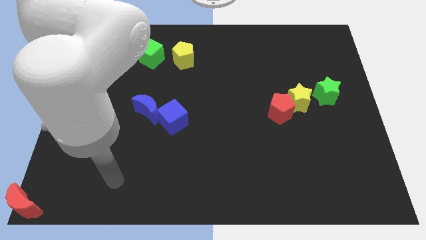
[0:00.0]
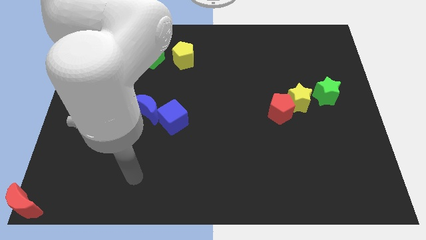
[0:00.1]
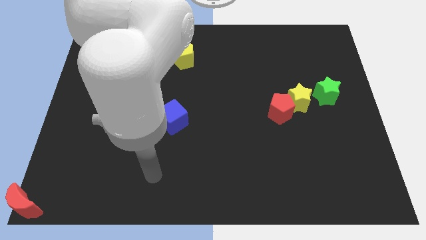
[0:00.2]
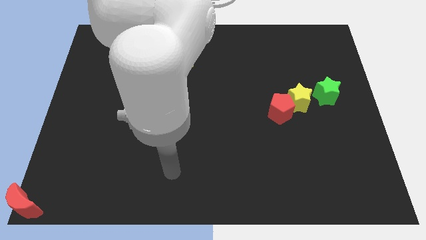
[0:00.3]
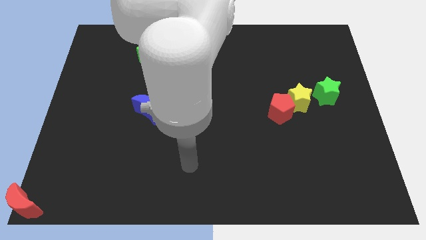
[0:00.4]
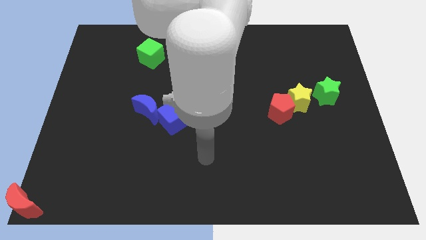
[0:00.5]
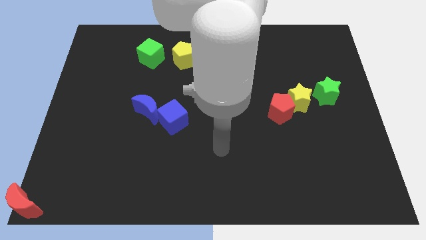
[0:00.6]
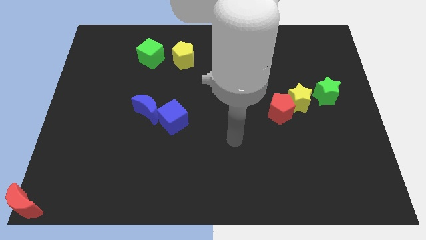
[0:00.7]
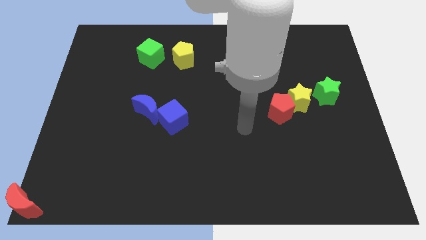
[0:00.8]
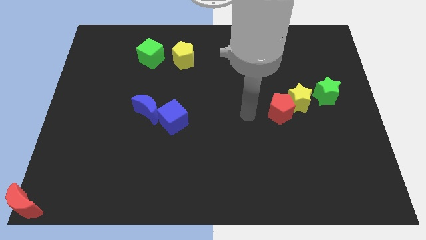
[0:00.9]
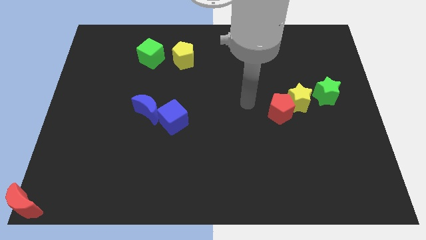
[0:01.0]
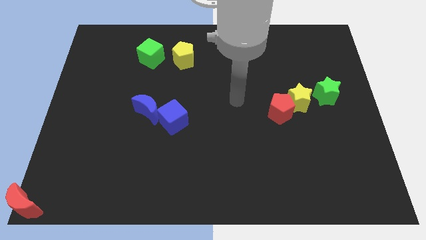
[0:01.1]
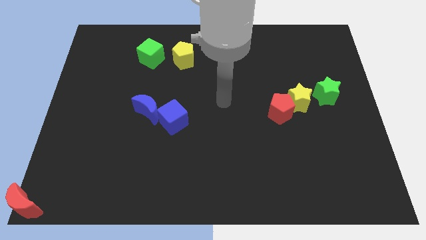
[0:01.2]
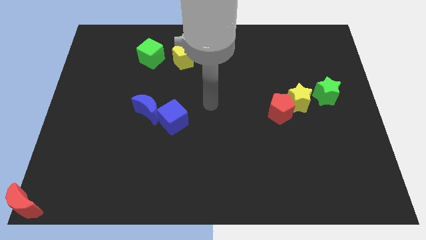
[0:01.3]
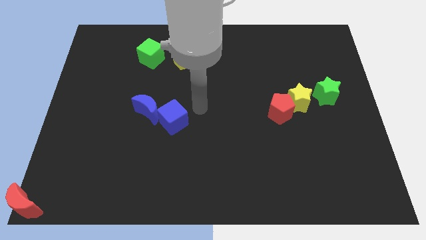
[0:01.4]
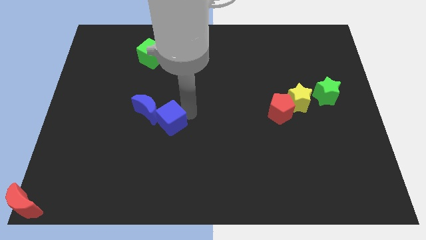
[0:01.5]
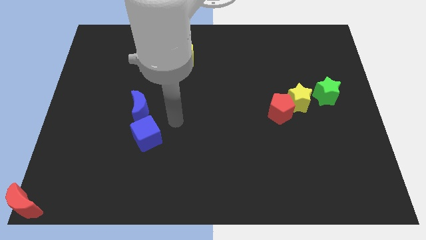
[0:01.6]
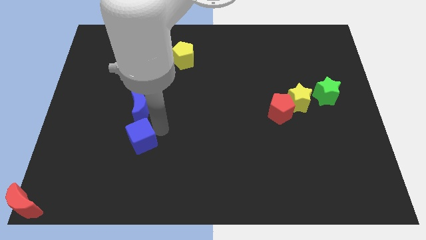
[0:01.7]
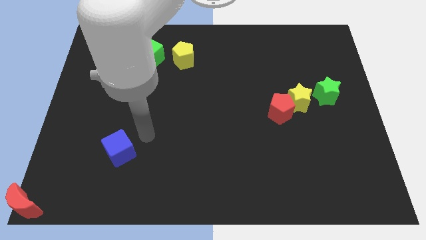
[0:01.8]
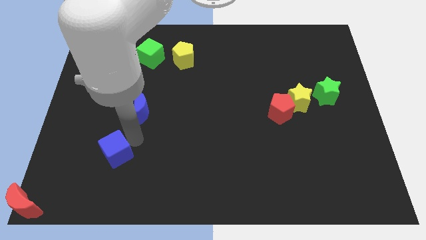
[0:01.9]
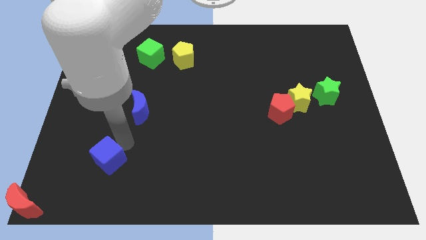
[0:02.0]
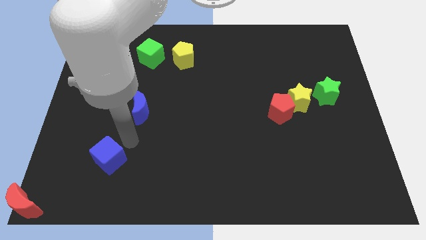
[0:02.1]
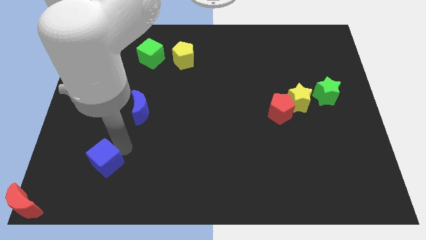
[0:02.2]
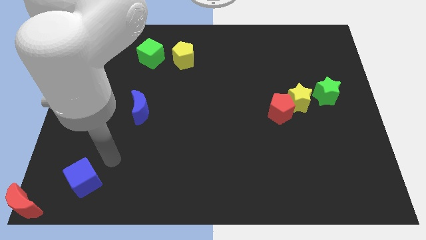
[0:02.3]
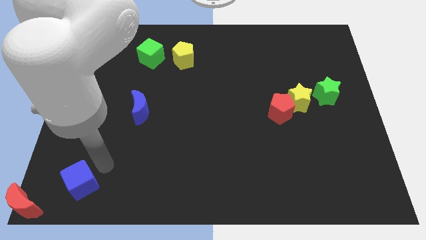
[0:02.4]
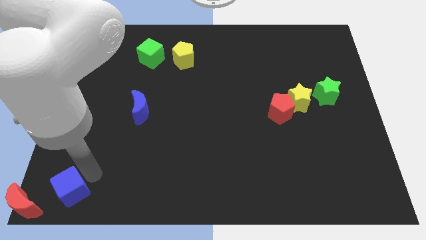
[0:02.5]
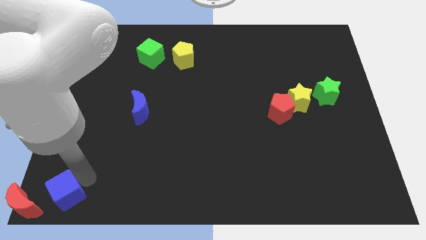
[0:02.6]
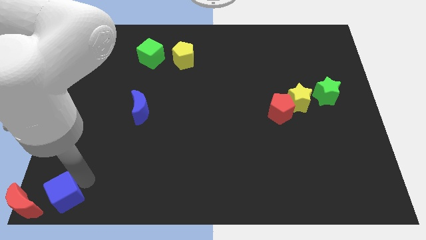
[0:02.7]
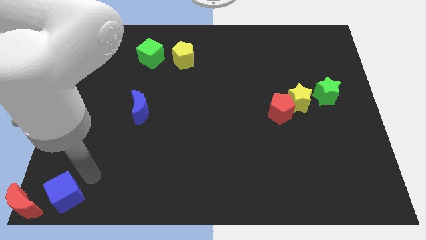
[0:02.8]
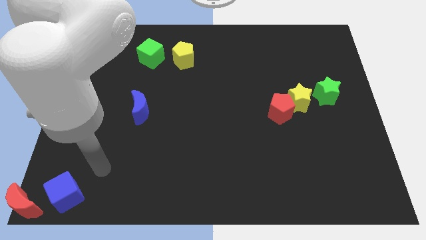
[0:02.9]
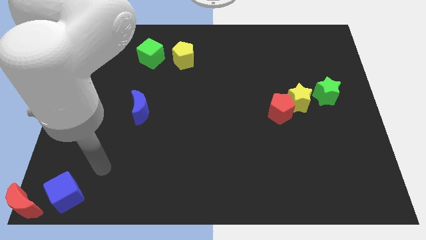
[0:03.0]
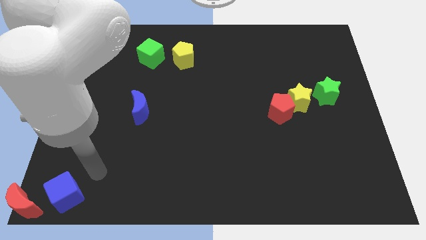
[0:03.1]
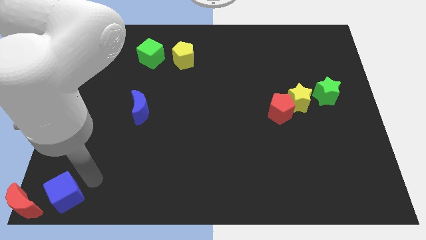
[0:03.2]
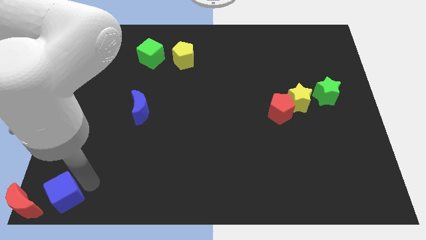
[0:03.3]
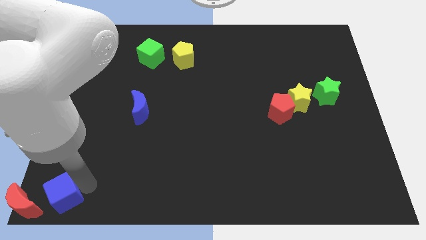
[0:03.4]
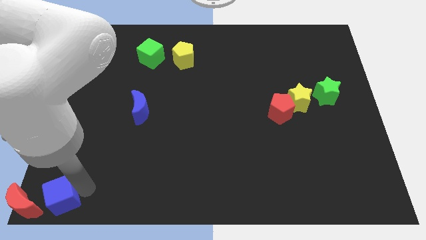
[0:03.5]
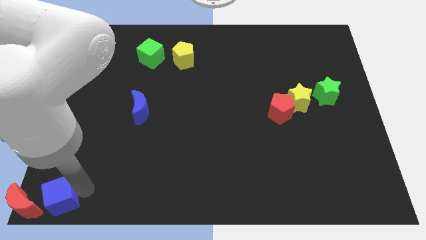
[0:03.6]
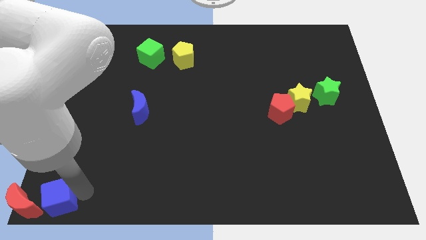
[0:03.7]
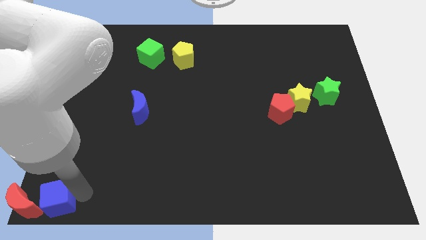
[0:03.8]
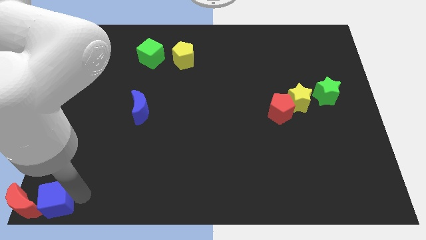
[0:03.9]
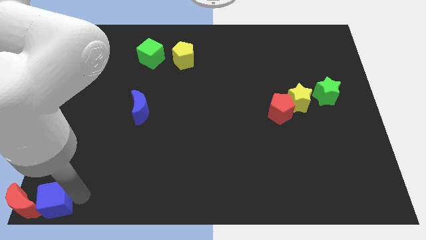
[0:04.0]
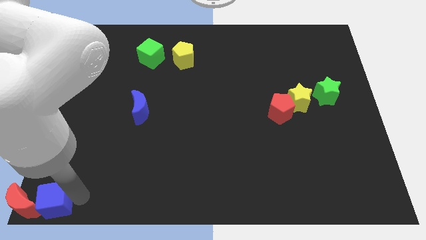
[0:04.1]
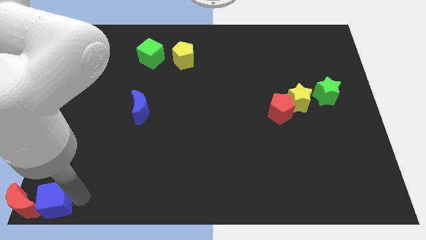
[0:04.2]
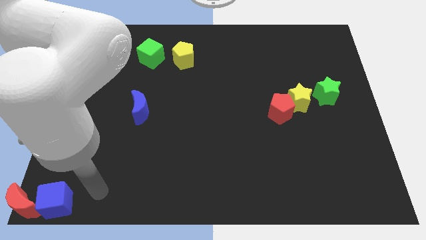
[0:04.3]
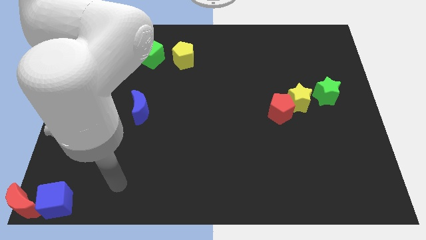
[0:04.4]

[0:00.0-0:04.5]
place the blue cube to the right side of the red crescent

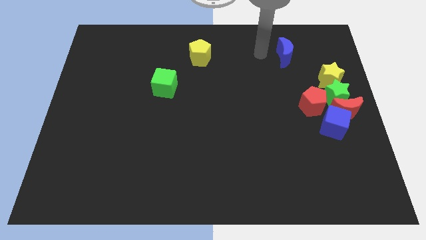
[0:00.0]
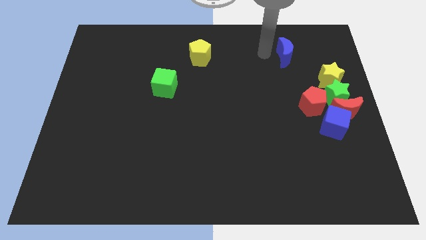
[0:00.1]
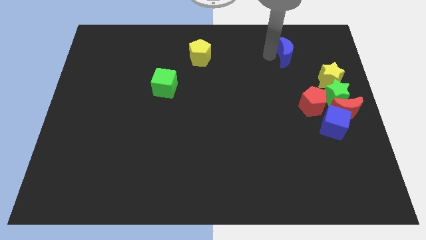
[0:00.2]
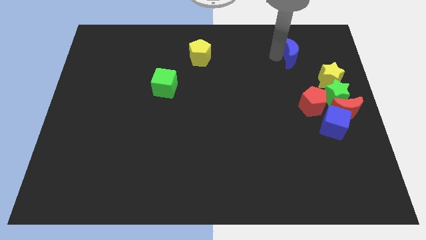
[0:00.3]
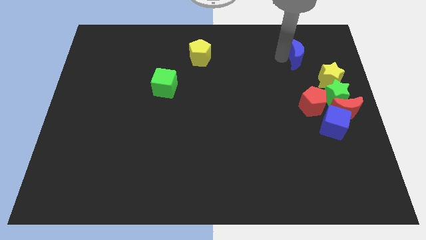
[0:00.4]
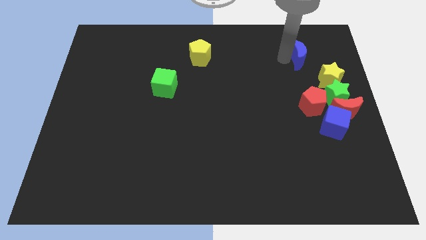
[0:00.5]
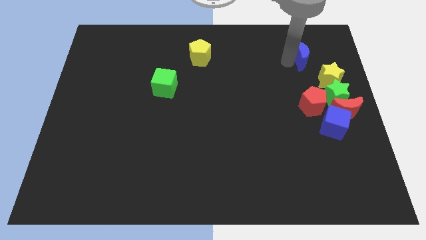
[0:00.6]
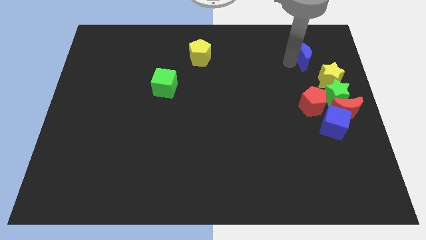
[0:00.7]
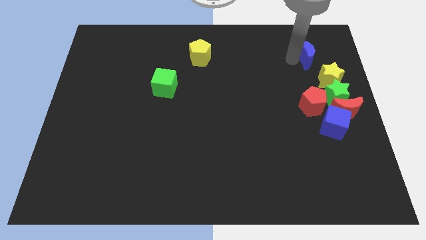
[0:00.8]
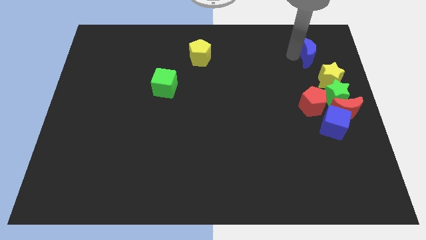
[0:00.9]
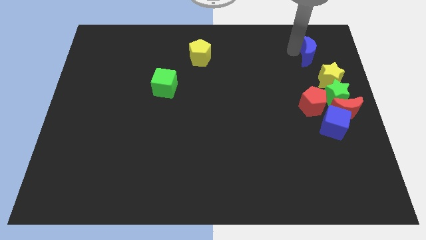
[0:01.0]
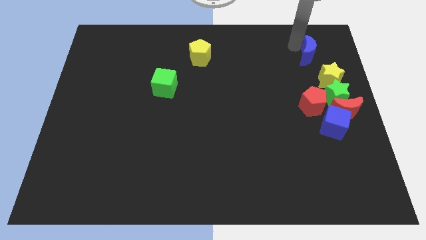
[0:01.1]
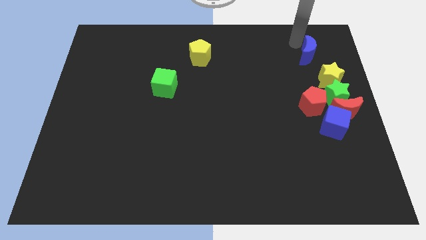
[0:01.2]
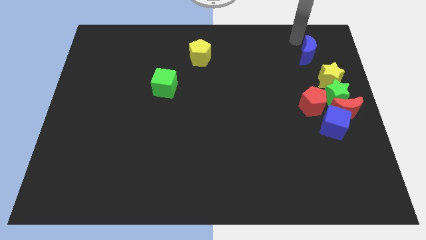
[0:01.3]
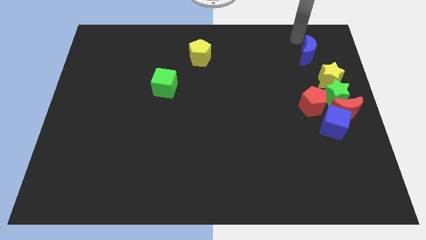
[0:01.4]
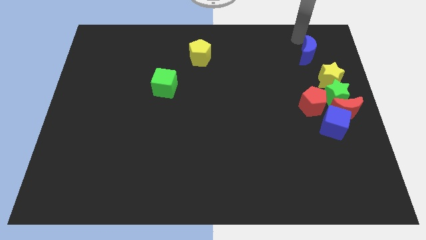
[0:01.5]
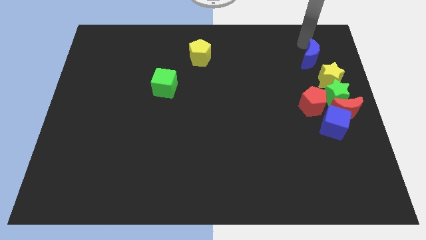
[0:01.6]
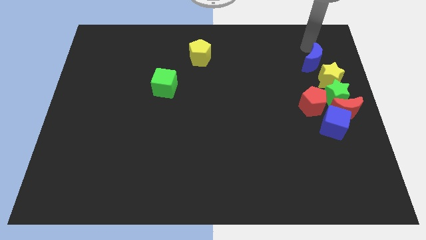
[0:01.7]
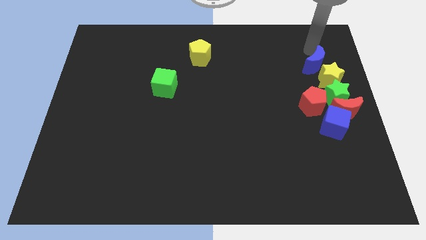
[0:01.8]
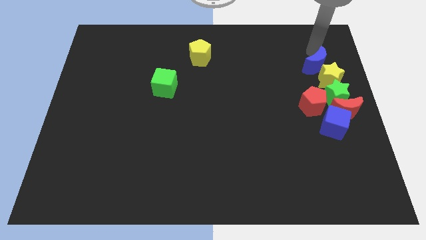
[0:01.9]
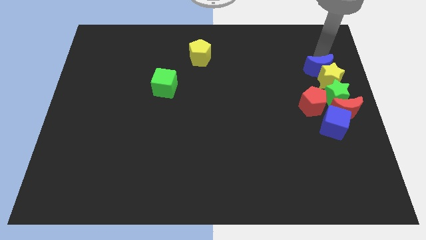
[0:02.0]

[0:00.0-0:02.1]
push the blue crescent into the top side of the yellow star

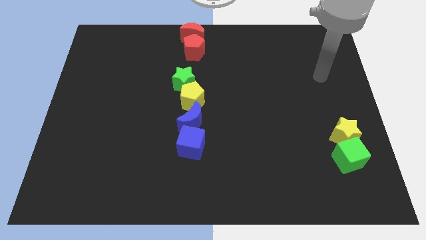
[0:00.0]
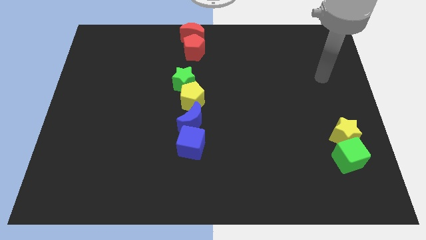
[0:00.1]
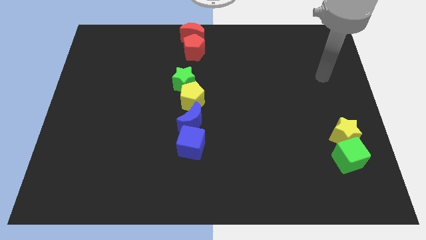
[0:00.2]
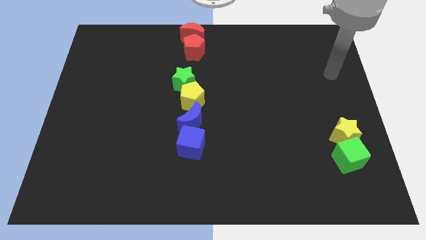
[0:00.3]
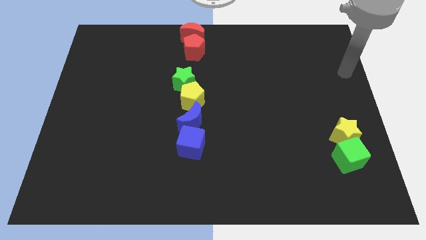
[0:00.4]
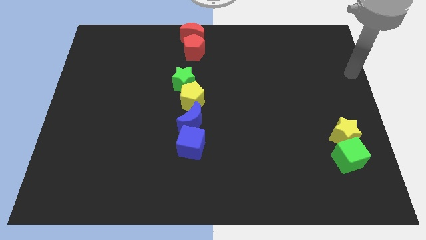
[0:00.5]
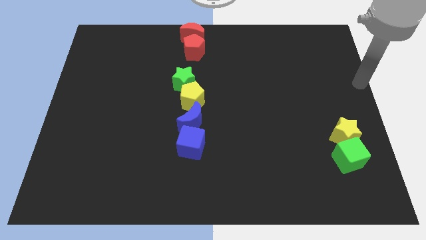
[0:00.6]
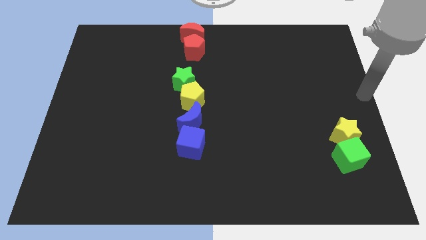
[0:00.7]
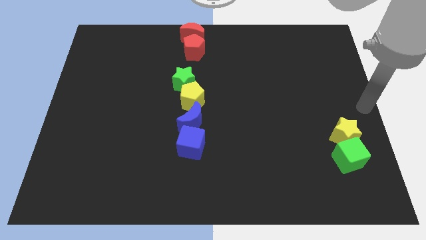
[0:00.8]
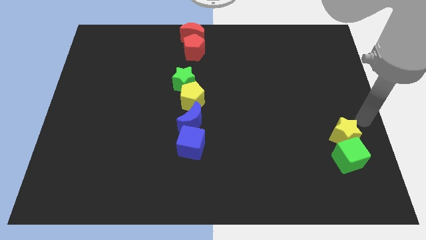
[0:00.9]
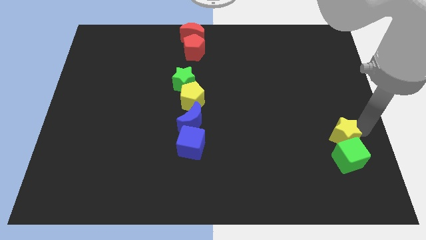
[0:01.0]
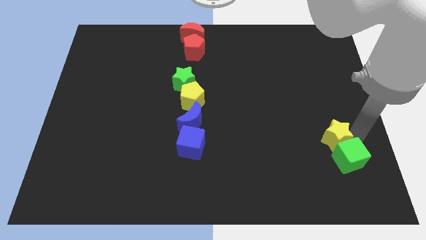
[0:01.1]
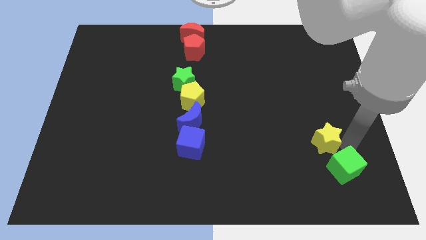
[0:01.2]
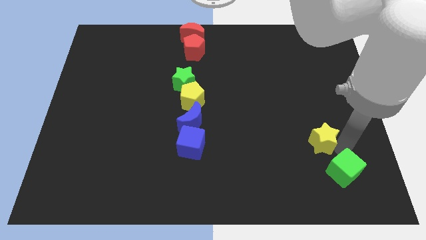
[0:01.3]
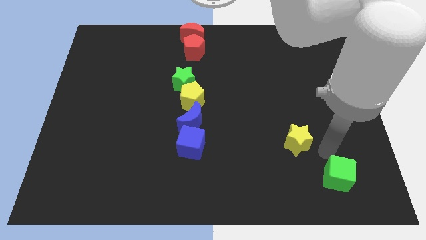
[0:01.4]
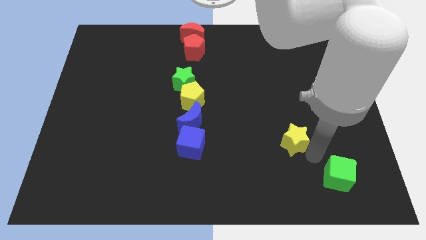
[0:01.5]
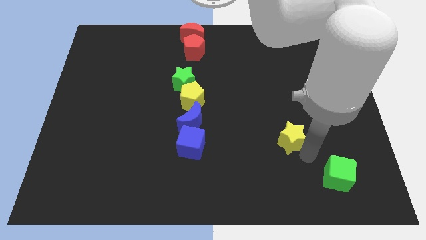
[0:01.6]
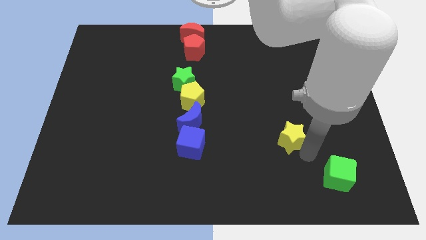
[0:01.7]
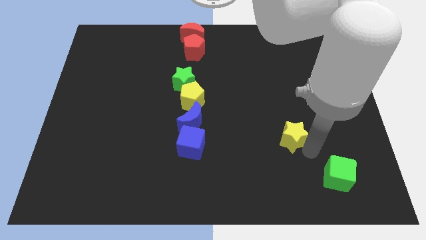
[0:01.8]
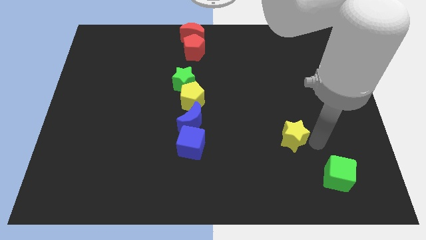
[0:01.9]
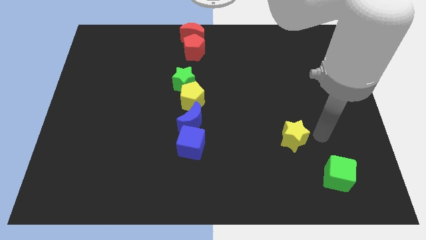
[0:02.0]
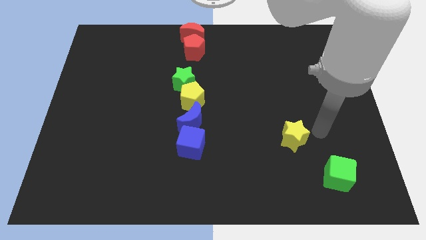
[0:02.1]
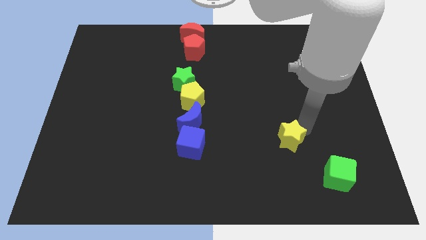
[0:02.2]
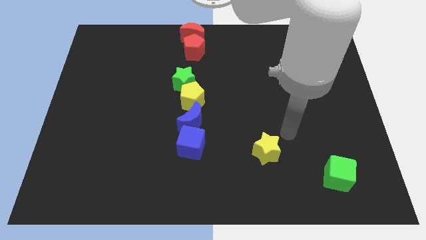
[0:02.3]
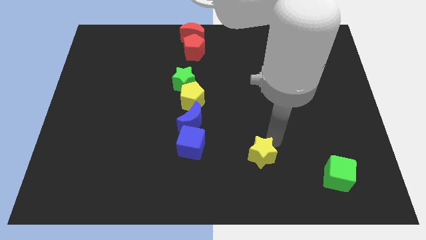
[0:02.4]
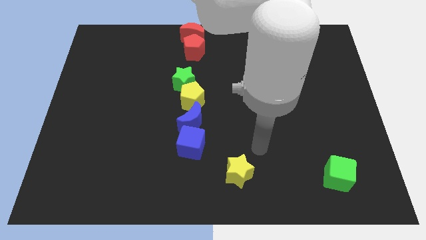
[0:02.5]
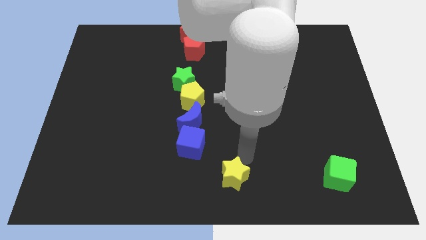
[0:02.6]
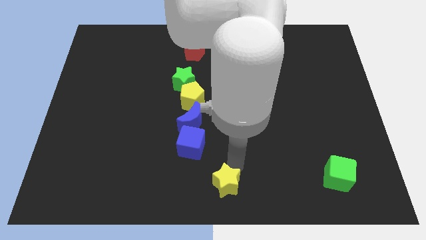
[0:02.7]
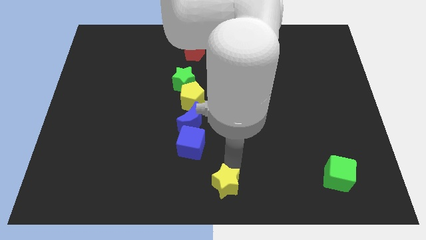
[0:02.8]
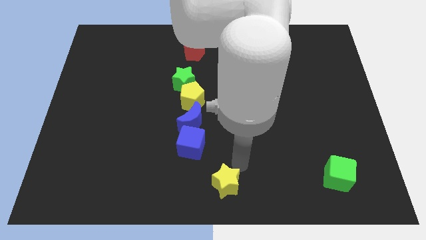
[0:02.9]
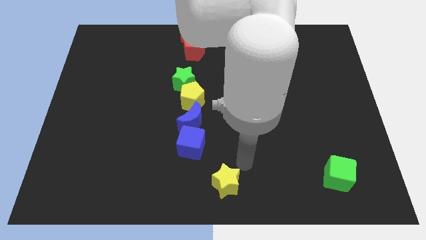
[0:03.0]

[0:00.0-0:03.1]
place yellow star to bottom right of blue cube
